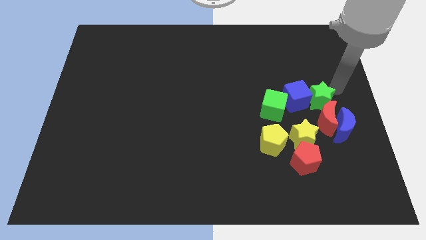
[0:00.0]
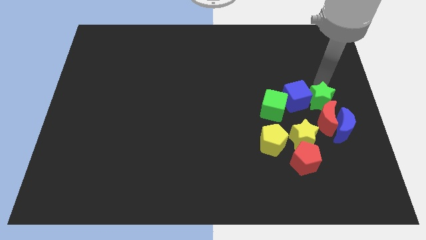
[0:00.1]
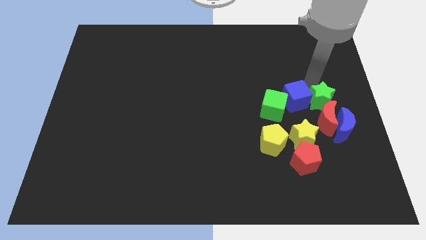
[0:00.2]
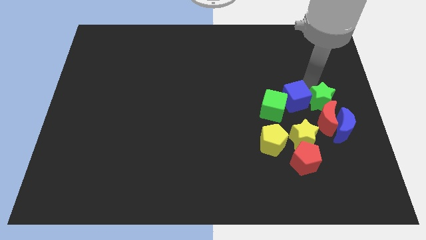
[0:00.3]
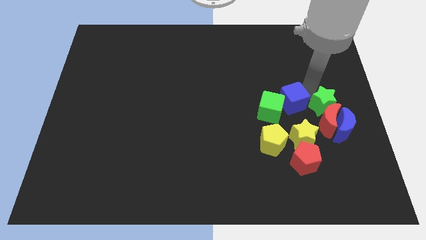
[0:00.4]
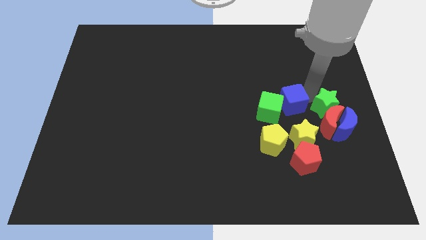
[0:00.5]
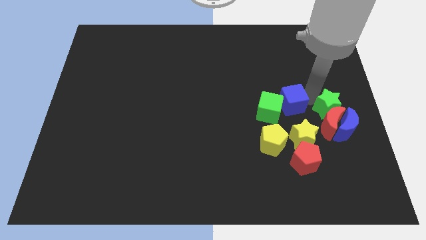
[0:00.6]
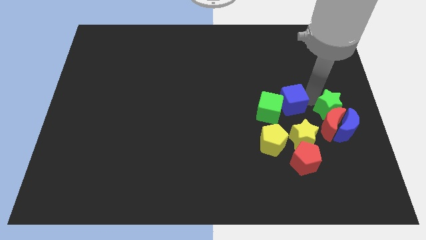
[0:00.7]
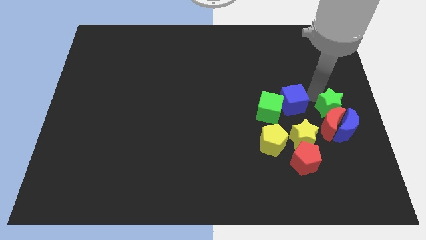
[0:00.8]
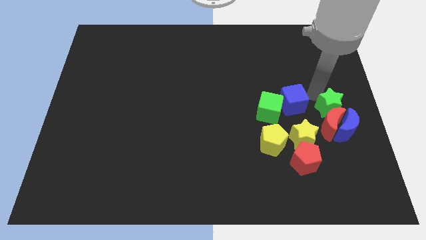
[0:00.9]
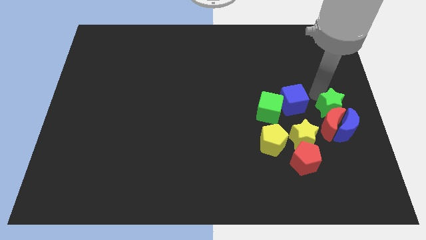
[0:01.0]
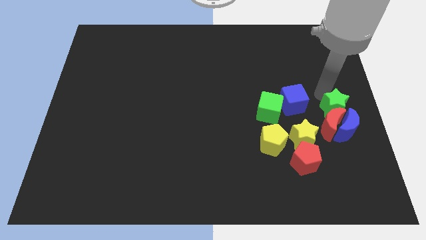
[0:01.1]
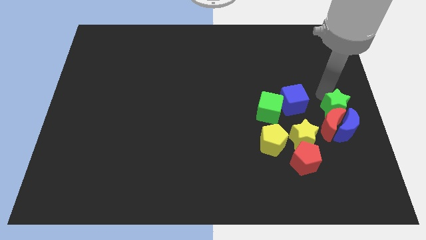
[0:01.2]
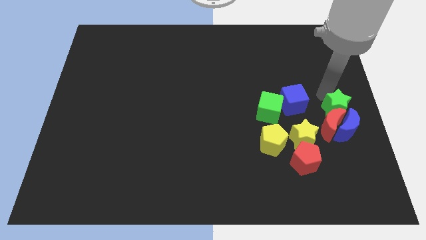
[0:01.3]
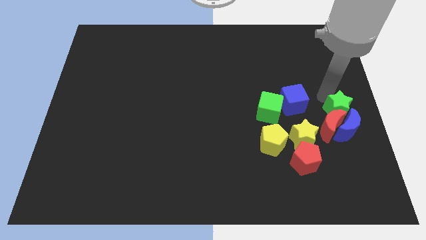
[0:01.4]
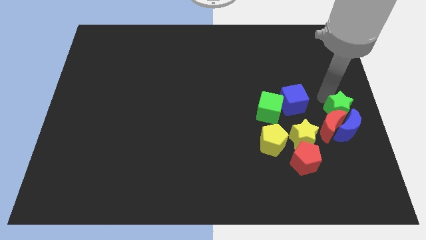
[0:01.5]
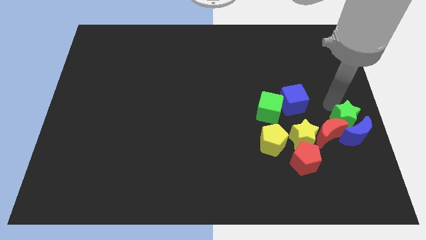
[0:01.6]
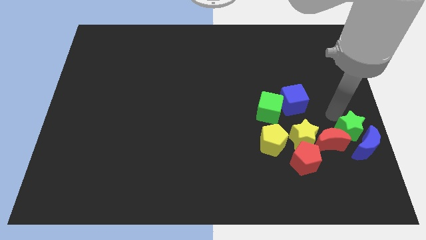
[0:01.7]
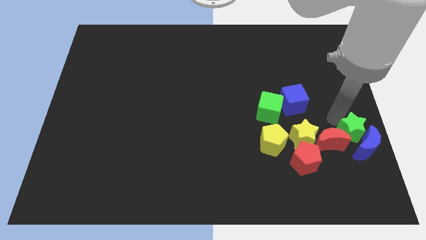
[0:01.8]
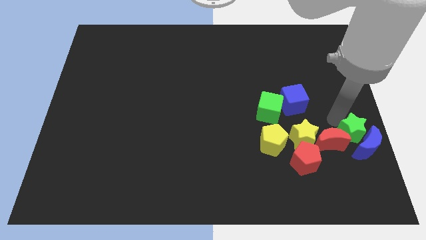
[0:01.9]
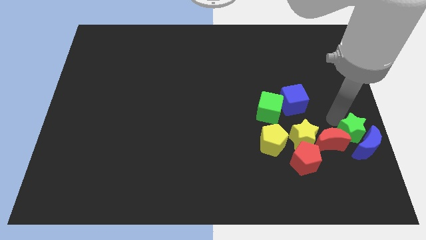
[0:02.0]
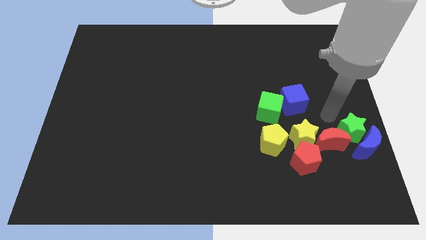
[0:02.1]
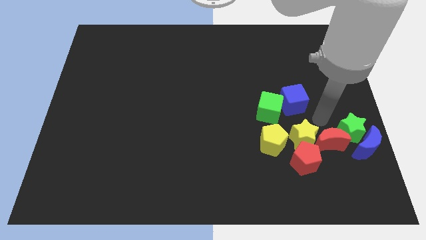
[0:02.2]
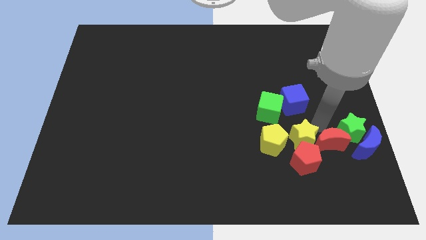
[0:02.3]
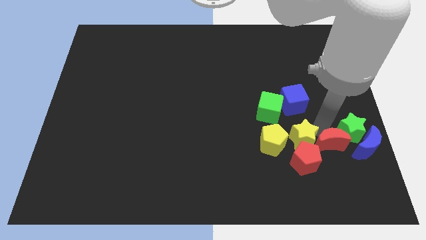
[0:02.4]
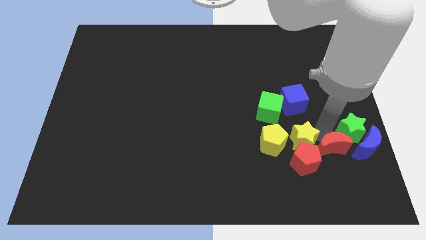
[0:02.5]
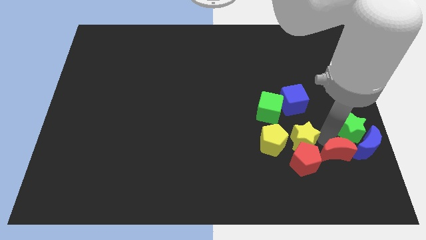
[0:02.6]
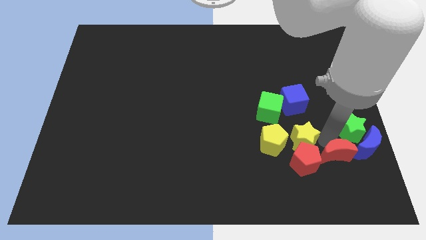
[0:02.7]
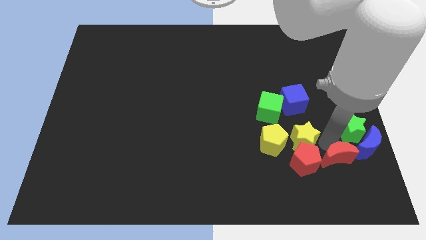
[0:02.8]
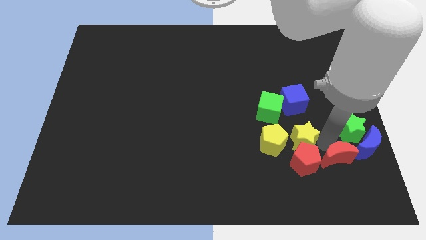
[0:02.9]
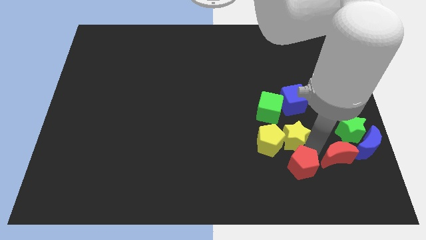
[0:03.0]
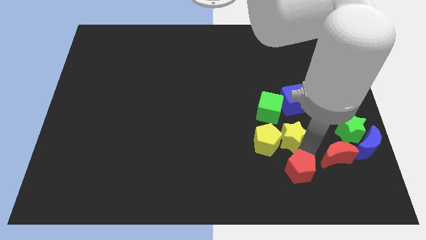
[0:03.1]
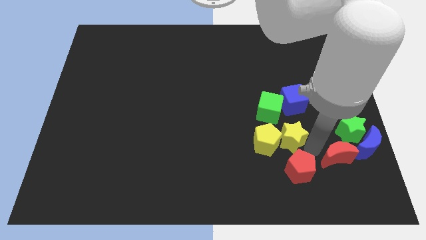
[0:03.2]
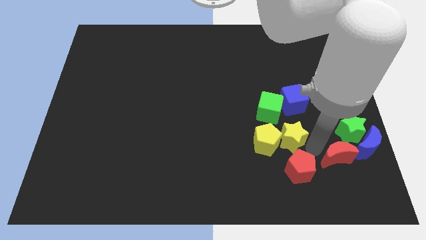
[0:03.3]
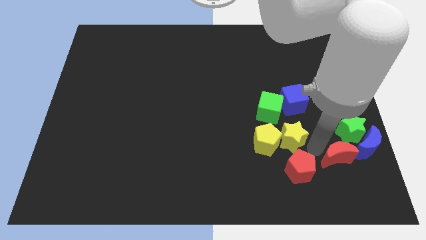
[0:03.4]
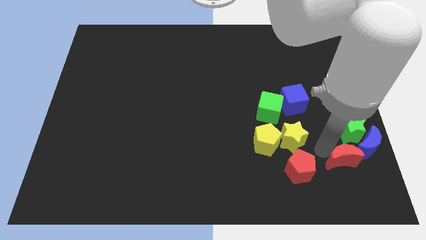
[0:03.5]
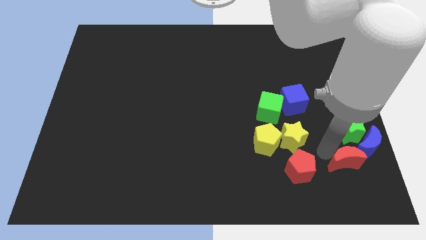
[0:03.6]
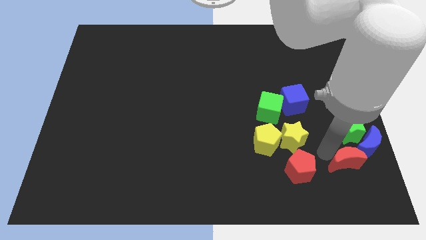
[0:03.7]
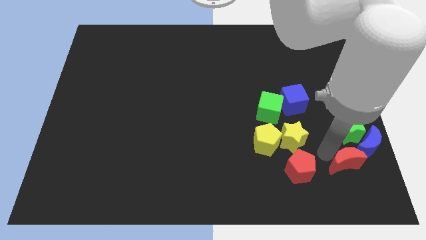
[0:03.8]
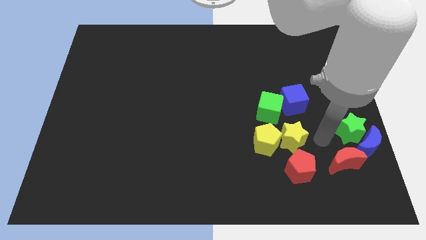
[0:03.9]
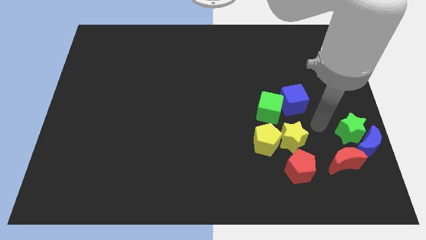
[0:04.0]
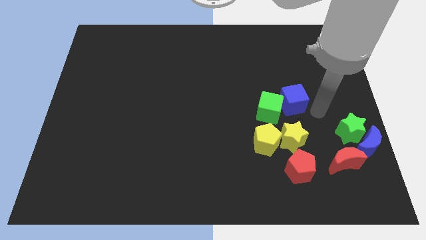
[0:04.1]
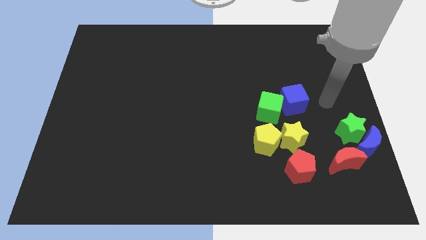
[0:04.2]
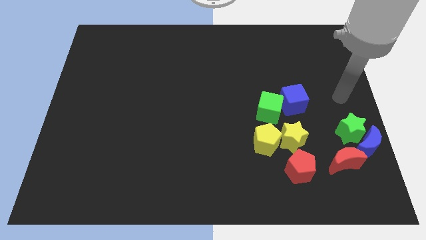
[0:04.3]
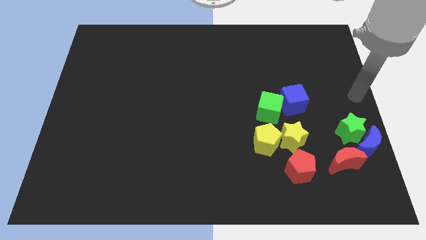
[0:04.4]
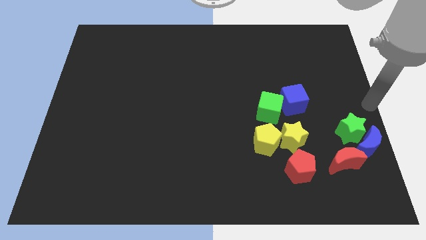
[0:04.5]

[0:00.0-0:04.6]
move the group of blocks to the right side of the board

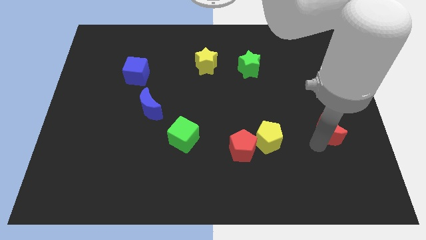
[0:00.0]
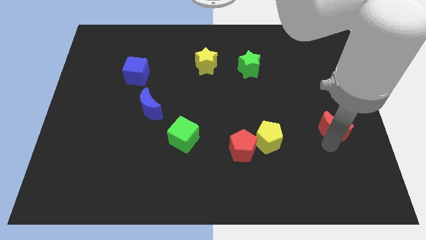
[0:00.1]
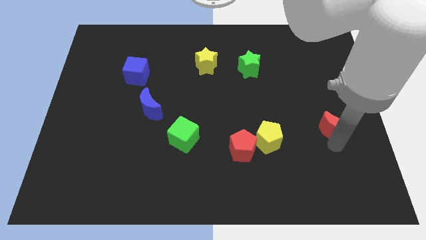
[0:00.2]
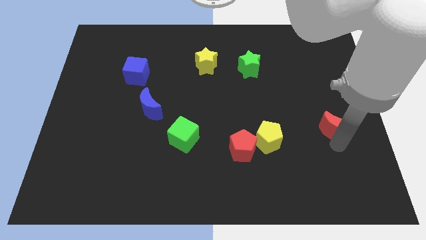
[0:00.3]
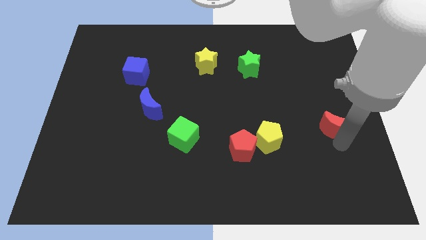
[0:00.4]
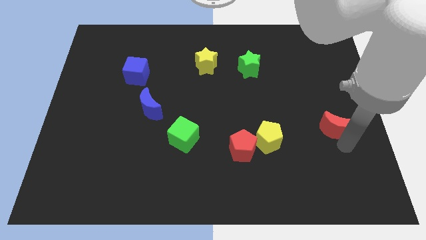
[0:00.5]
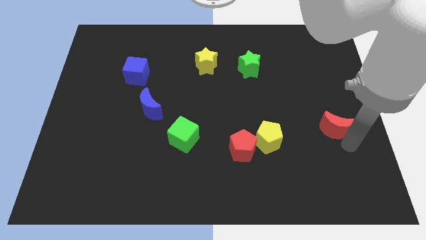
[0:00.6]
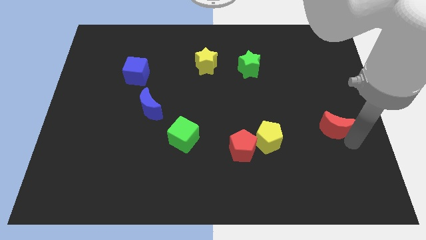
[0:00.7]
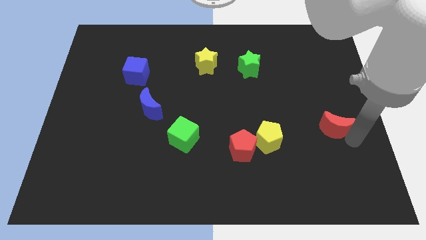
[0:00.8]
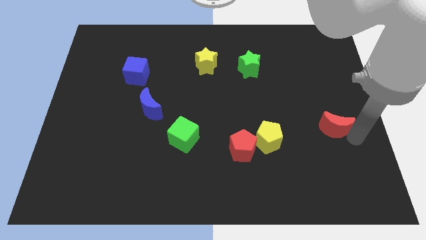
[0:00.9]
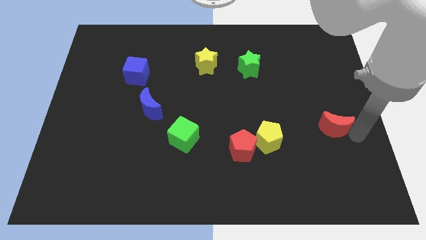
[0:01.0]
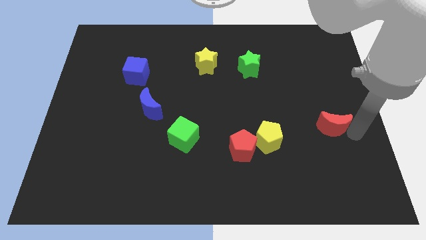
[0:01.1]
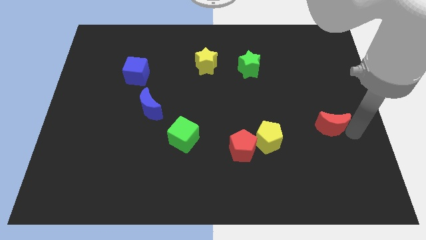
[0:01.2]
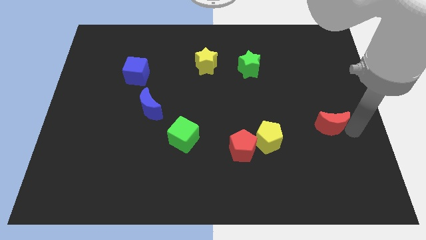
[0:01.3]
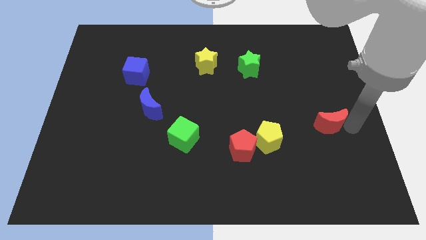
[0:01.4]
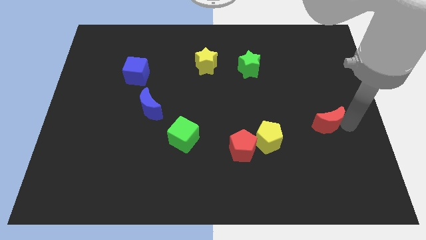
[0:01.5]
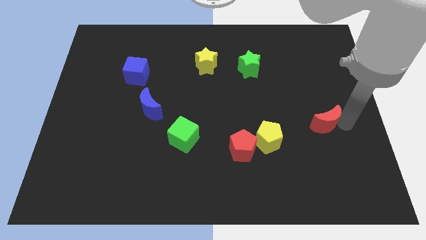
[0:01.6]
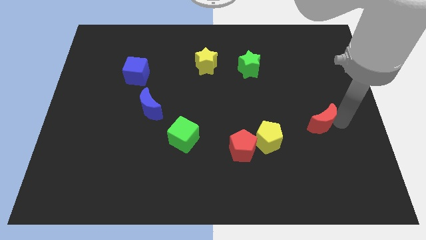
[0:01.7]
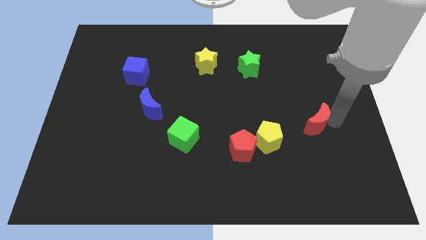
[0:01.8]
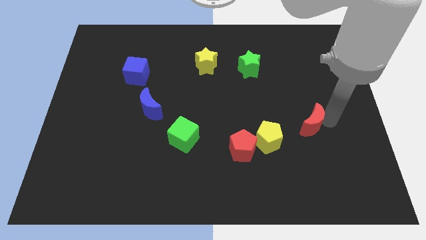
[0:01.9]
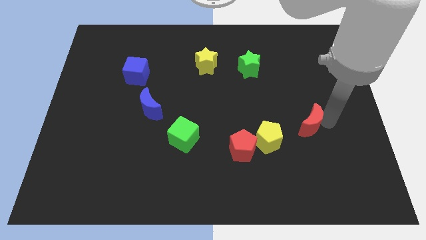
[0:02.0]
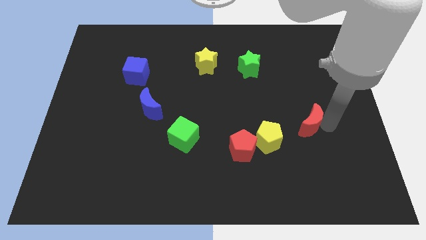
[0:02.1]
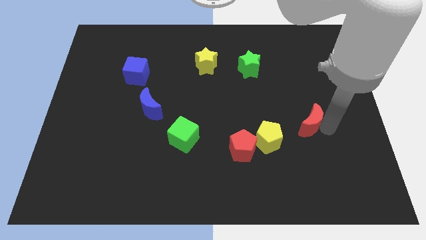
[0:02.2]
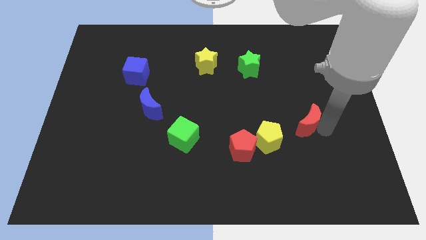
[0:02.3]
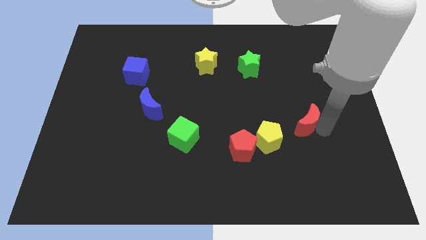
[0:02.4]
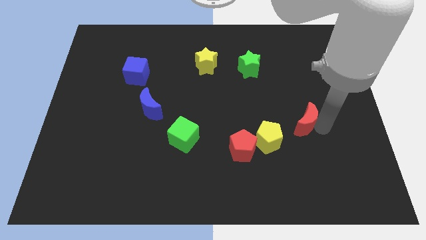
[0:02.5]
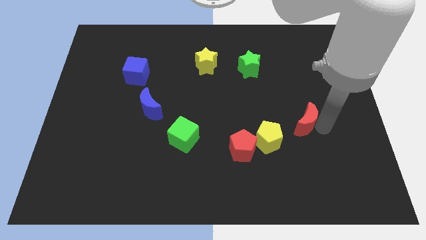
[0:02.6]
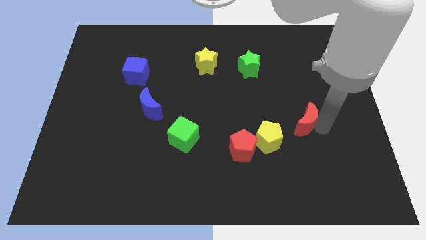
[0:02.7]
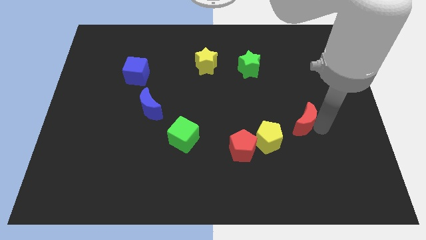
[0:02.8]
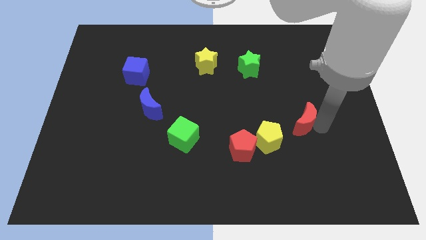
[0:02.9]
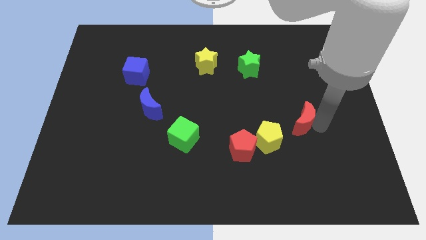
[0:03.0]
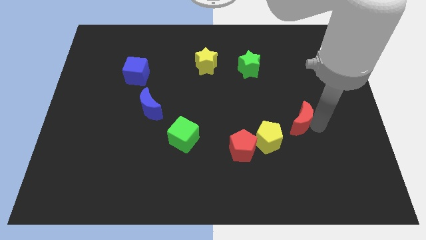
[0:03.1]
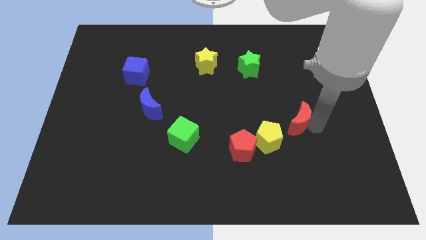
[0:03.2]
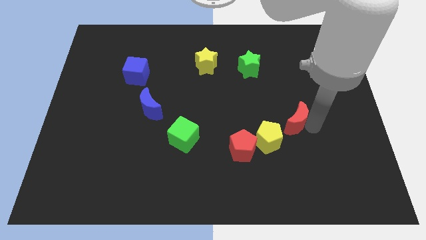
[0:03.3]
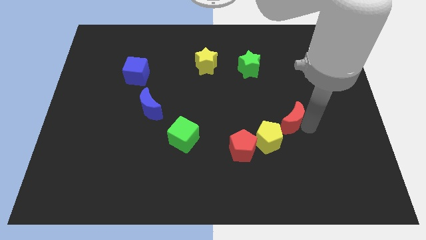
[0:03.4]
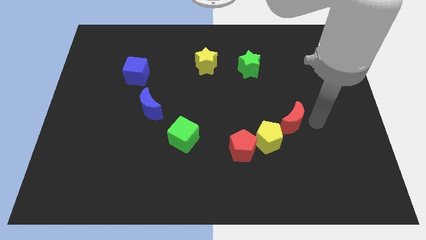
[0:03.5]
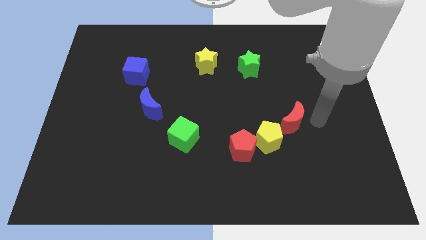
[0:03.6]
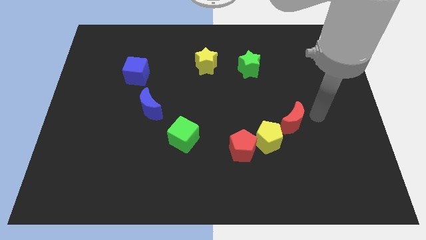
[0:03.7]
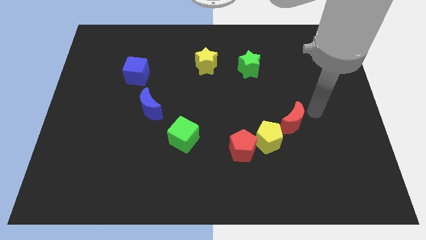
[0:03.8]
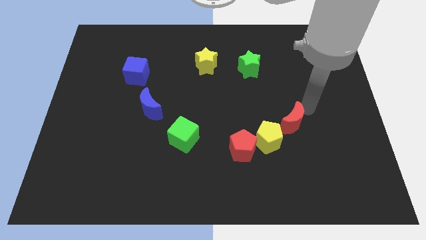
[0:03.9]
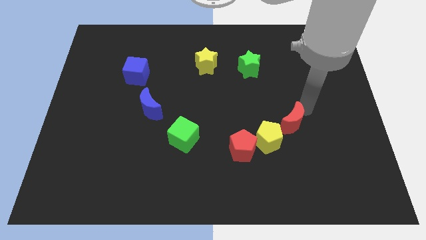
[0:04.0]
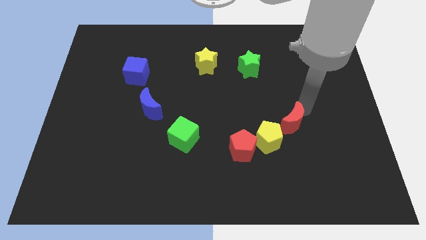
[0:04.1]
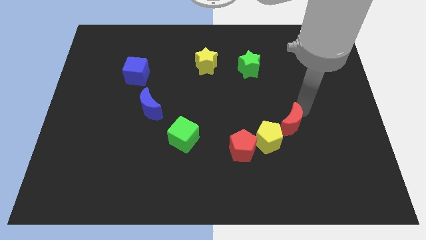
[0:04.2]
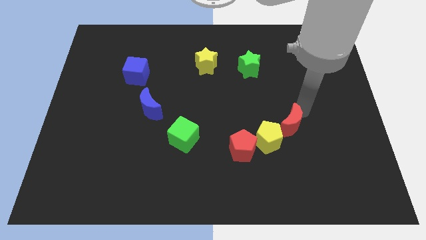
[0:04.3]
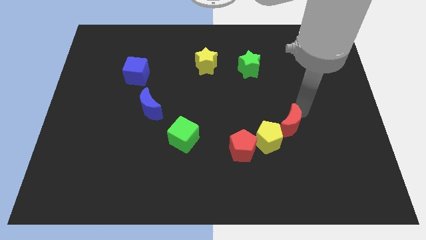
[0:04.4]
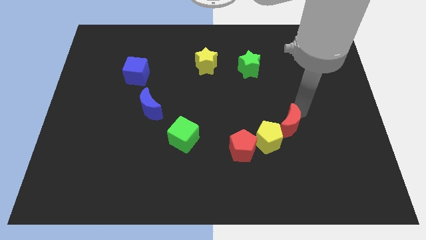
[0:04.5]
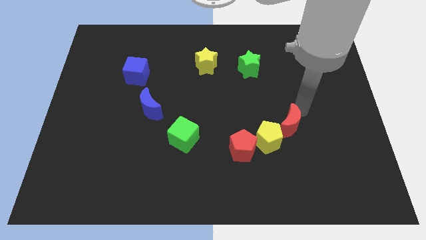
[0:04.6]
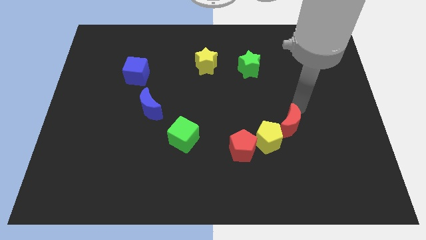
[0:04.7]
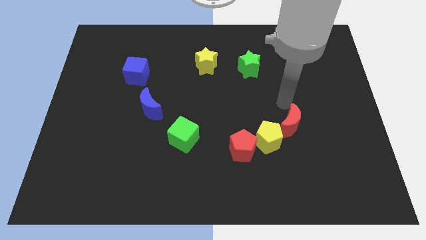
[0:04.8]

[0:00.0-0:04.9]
place the red crescent close to the yellow pentagon
